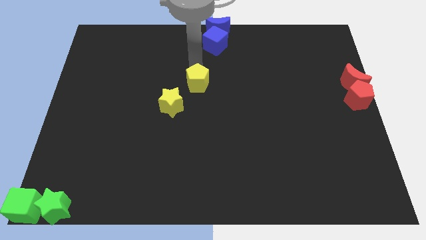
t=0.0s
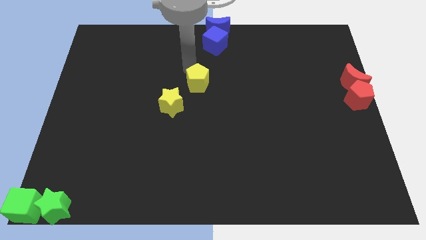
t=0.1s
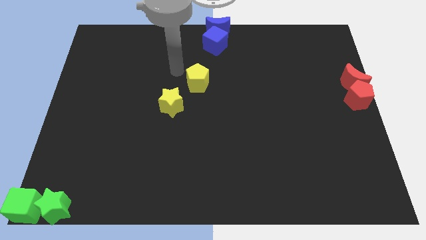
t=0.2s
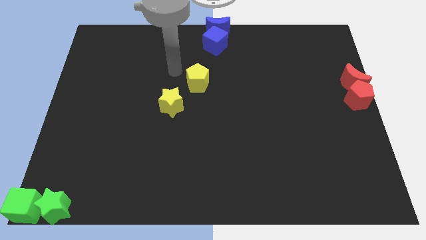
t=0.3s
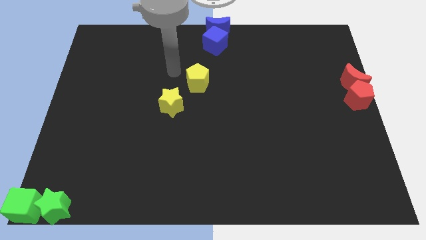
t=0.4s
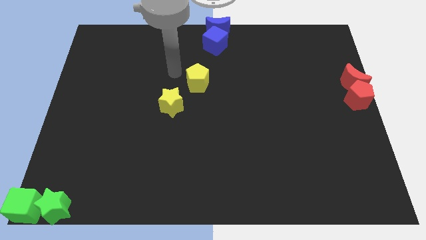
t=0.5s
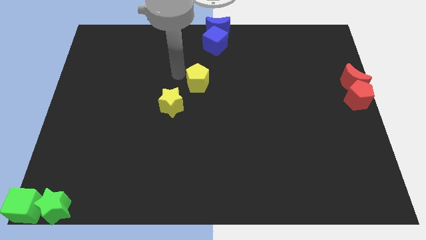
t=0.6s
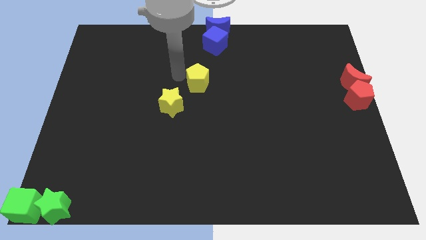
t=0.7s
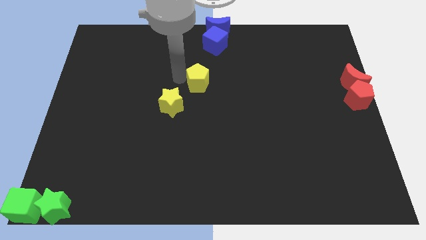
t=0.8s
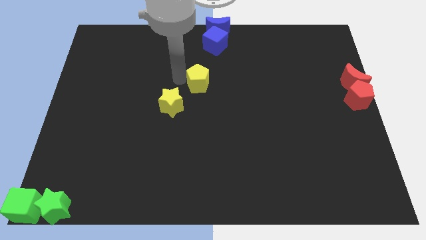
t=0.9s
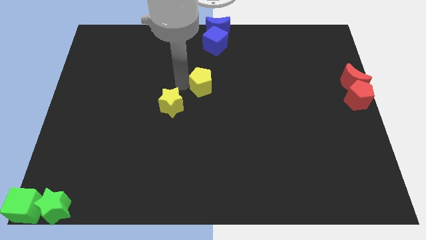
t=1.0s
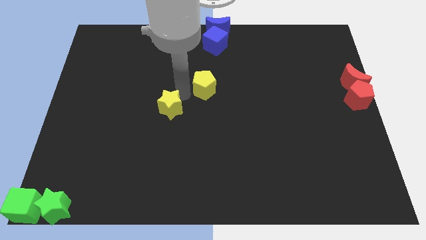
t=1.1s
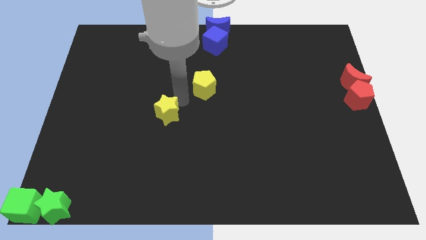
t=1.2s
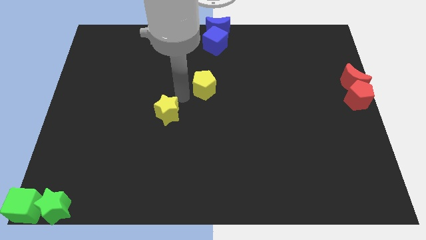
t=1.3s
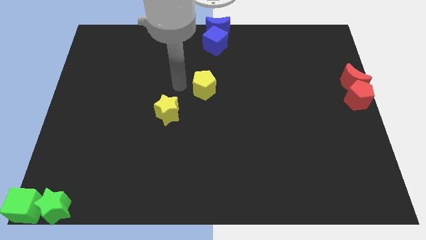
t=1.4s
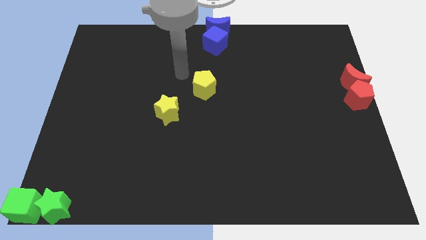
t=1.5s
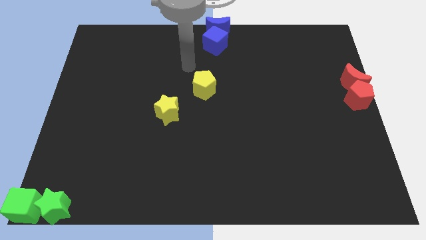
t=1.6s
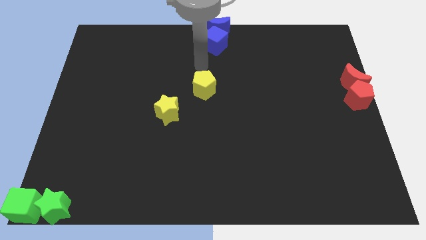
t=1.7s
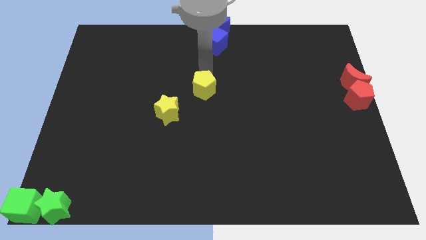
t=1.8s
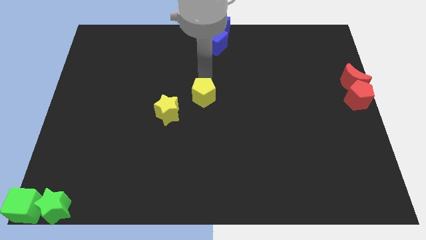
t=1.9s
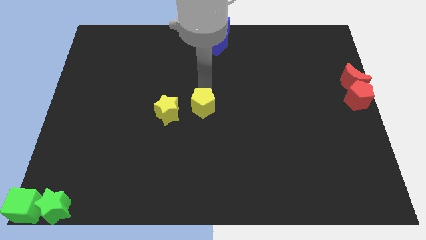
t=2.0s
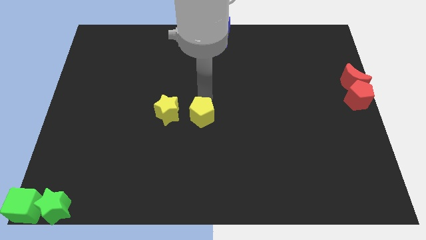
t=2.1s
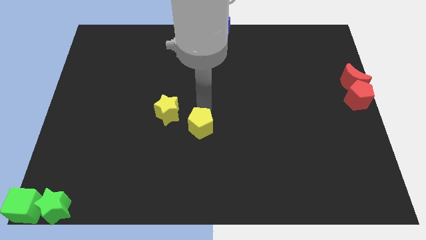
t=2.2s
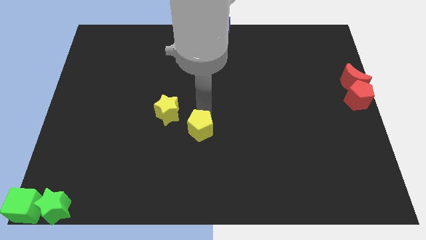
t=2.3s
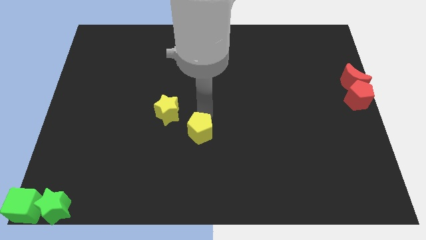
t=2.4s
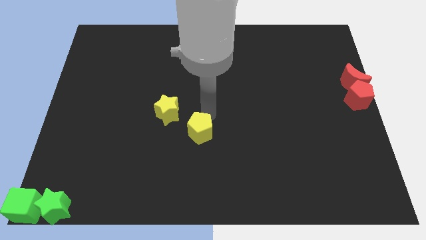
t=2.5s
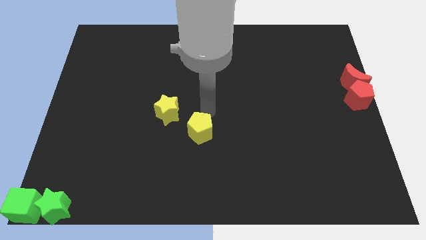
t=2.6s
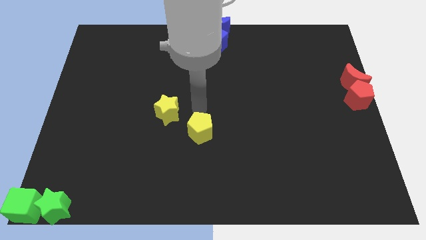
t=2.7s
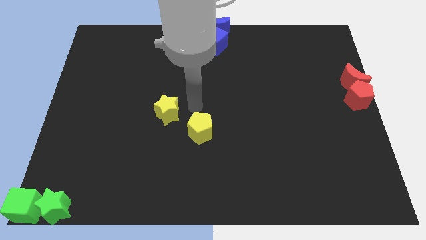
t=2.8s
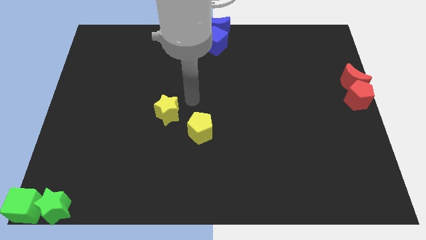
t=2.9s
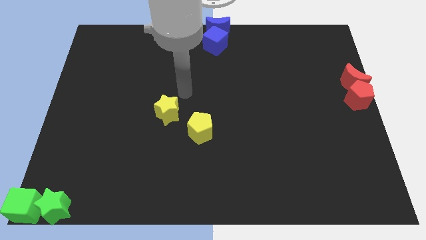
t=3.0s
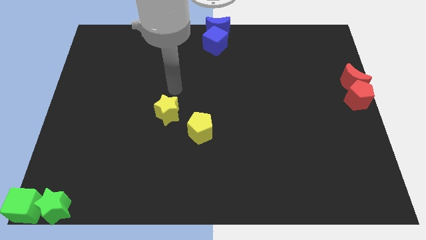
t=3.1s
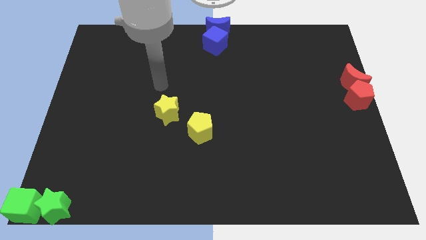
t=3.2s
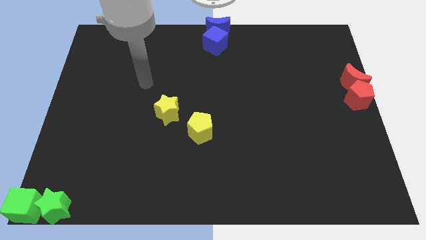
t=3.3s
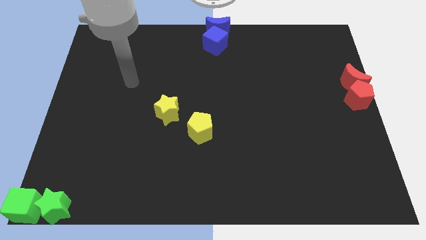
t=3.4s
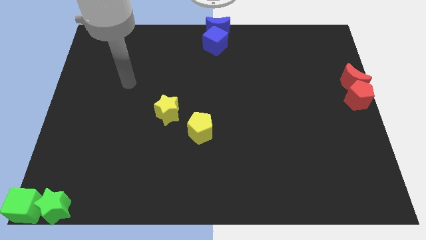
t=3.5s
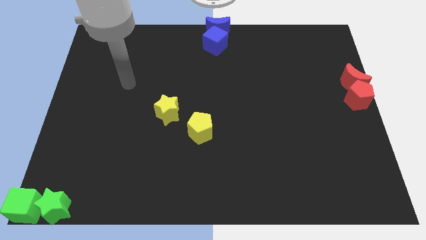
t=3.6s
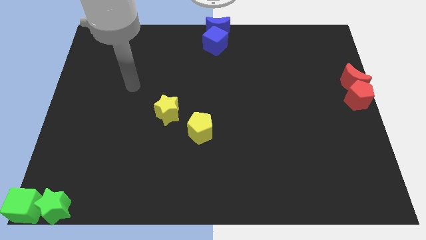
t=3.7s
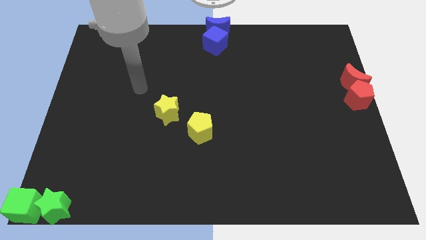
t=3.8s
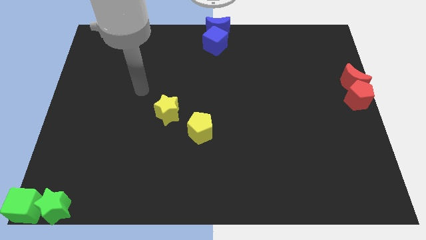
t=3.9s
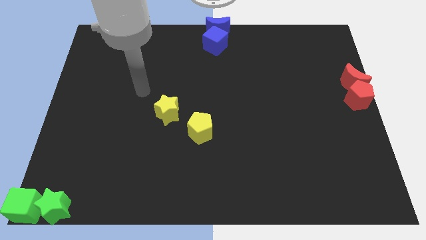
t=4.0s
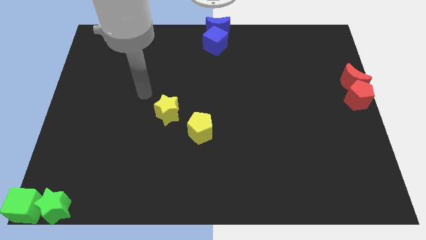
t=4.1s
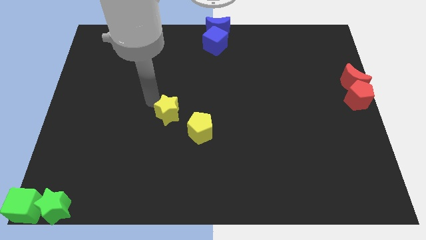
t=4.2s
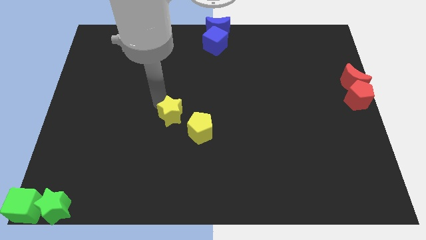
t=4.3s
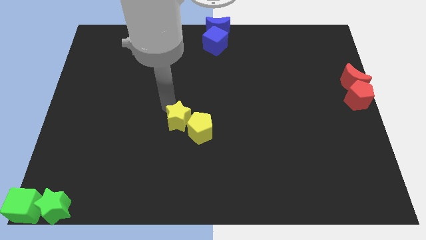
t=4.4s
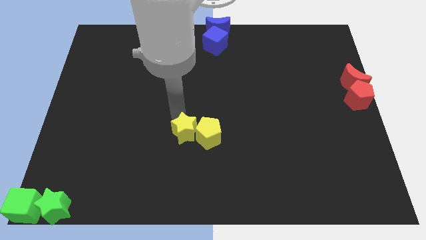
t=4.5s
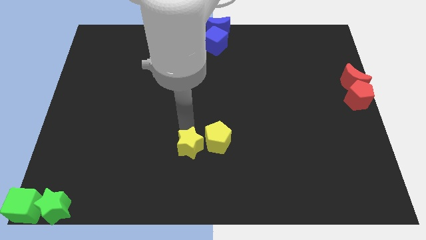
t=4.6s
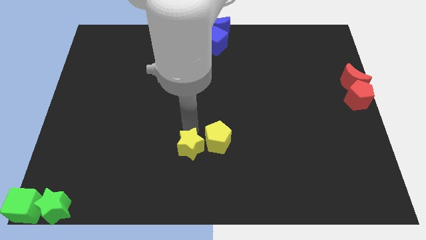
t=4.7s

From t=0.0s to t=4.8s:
slide the yellow pentagon and yellow star towards the bottom side of the board

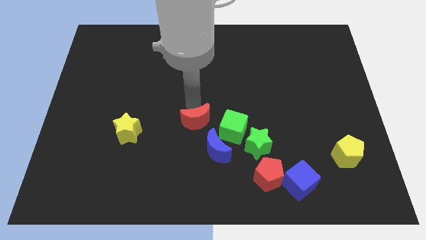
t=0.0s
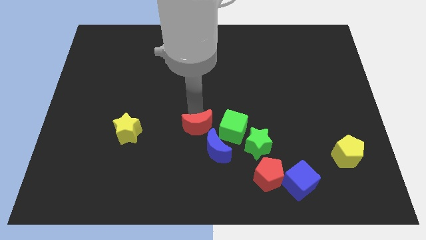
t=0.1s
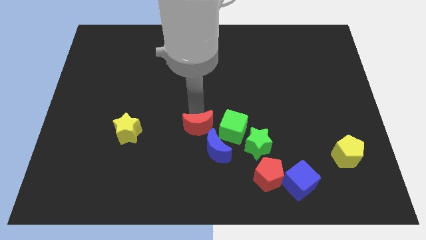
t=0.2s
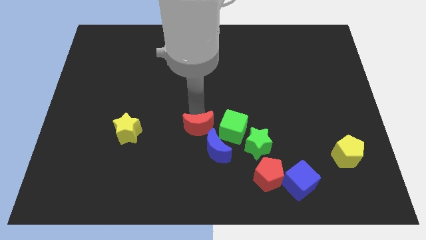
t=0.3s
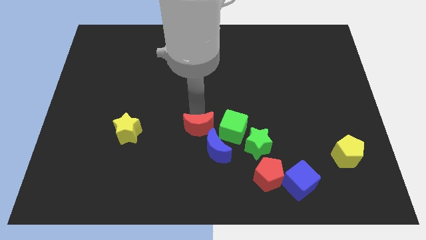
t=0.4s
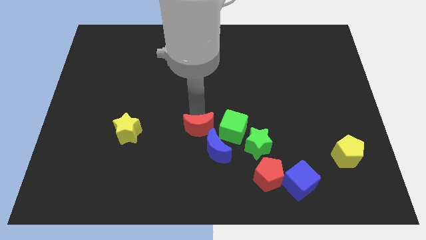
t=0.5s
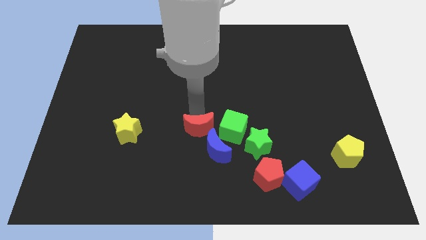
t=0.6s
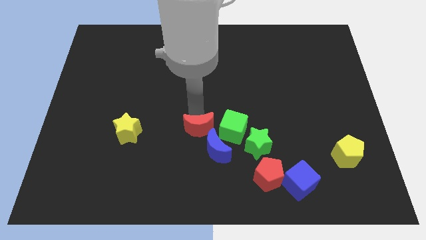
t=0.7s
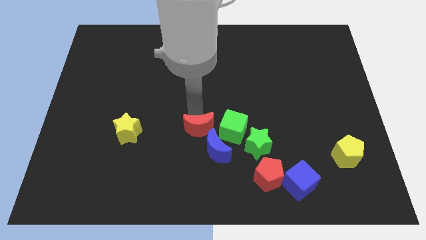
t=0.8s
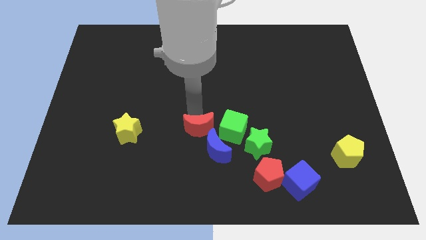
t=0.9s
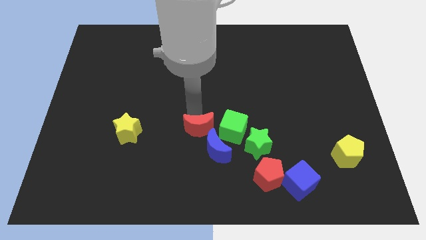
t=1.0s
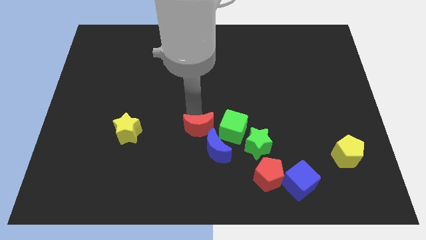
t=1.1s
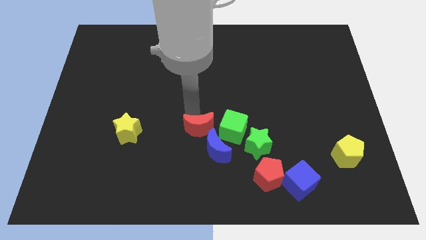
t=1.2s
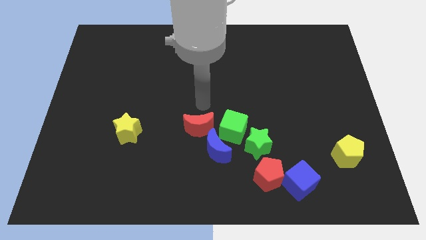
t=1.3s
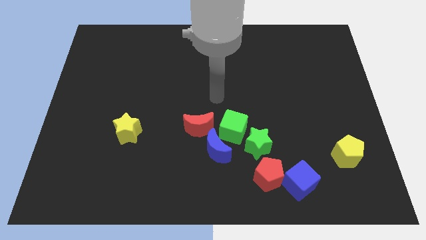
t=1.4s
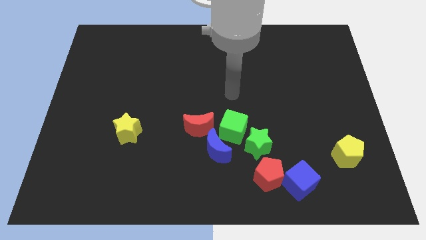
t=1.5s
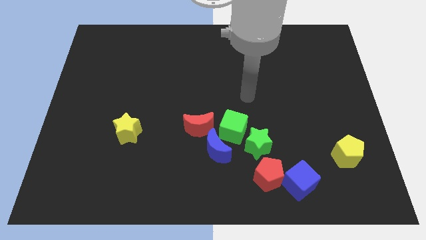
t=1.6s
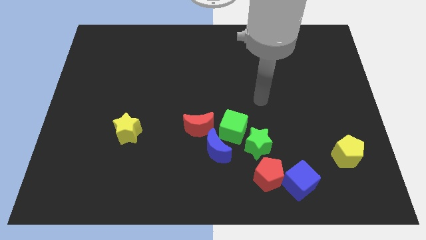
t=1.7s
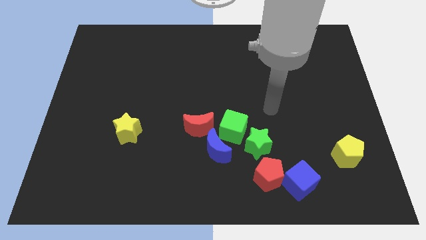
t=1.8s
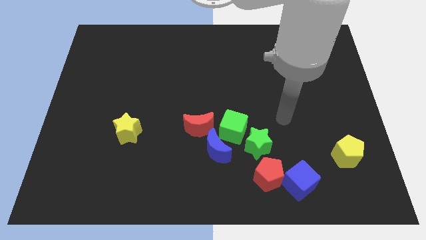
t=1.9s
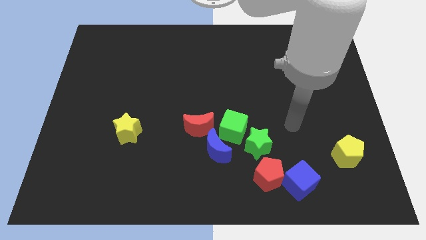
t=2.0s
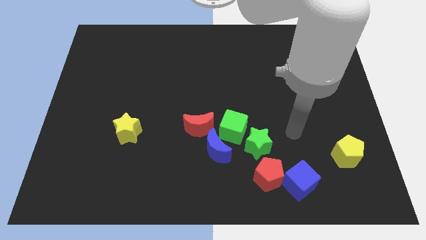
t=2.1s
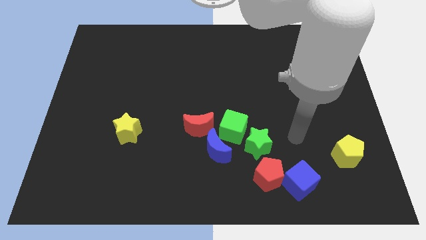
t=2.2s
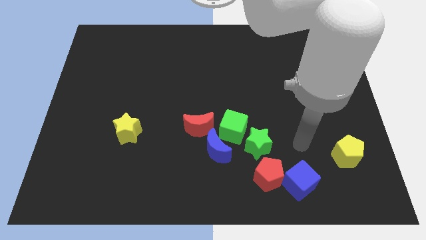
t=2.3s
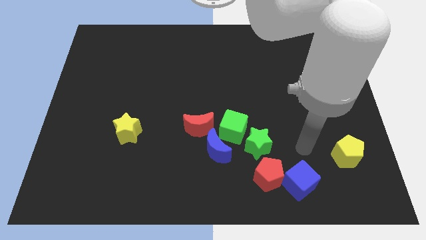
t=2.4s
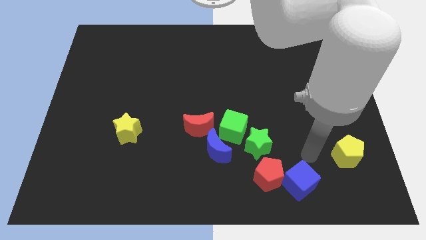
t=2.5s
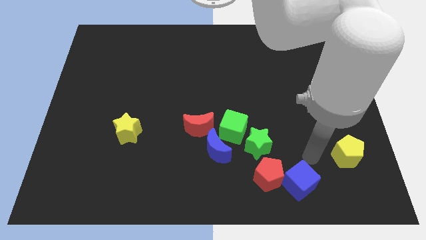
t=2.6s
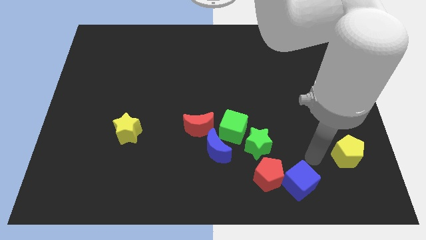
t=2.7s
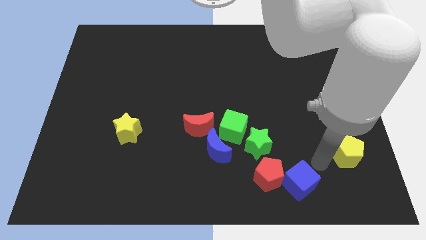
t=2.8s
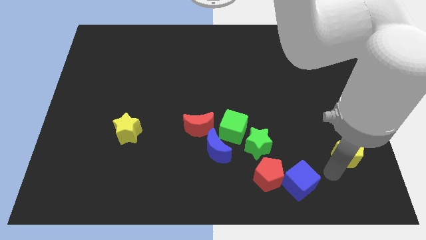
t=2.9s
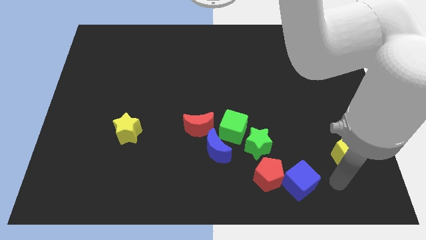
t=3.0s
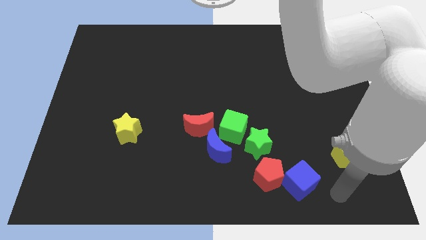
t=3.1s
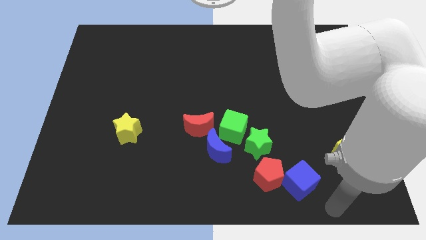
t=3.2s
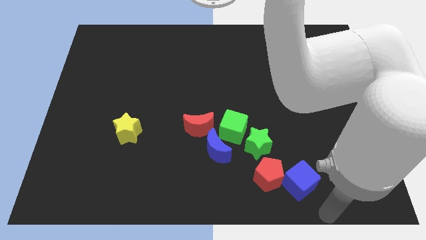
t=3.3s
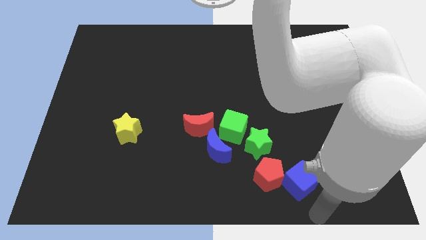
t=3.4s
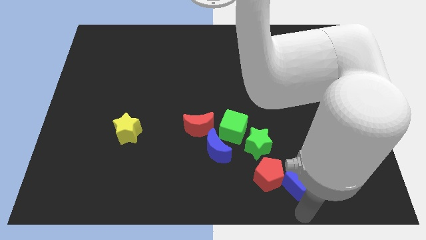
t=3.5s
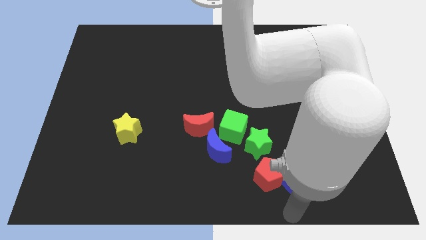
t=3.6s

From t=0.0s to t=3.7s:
move your arm to the bottom of the blue cube

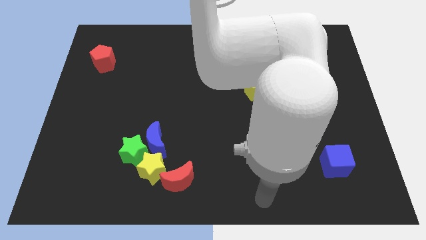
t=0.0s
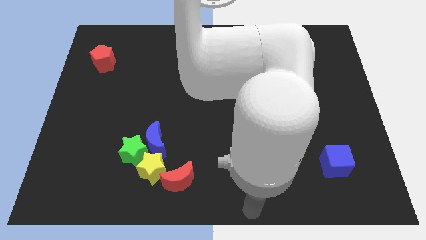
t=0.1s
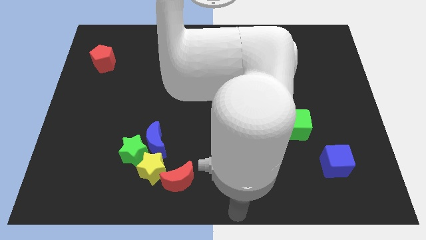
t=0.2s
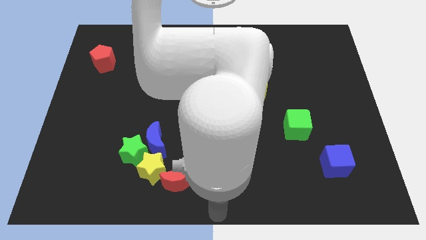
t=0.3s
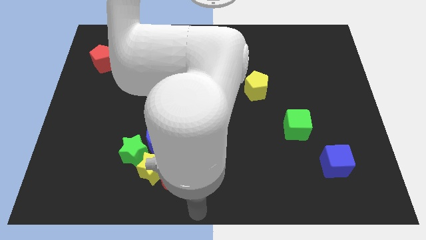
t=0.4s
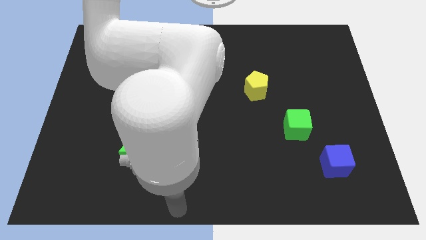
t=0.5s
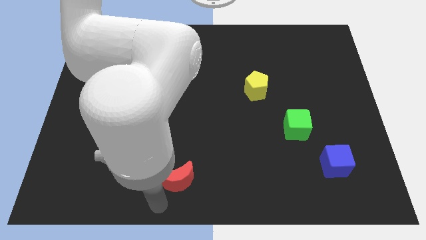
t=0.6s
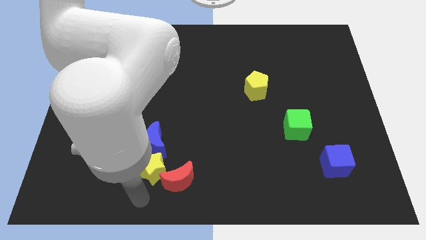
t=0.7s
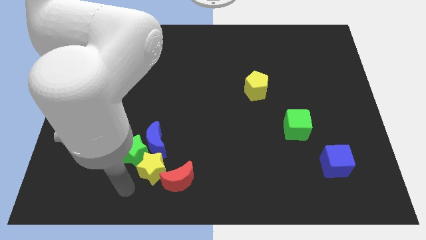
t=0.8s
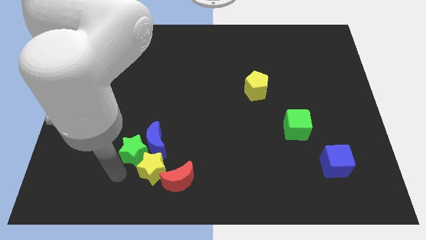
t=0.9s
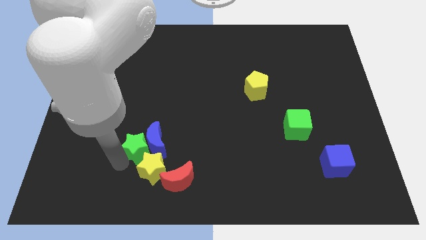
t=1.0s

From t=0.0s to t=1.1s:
place your hand to the bottom of green star
